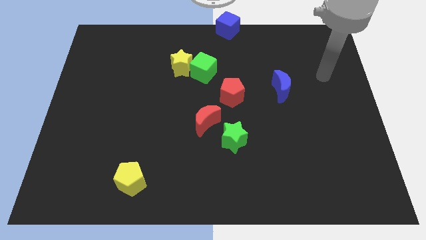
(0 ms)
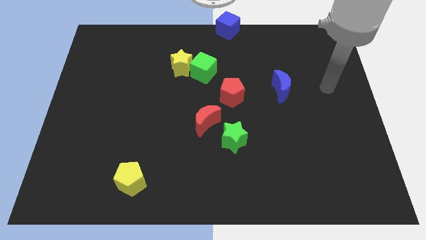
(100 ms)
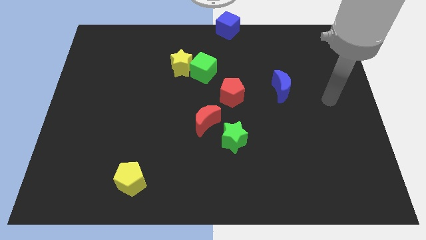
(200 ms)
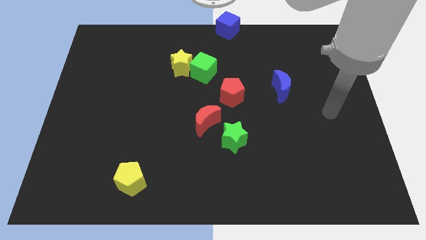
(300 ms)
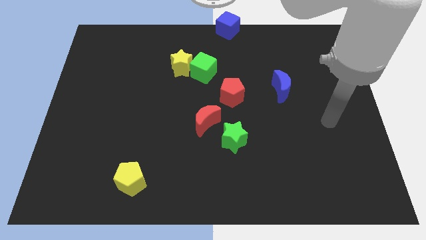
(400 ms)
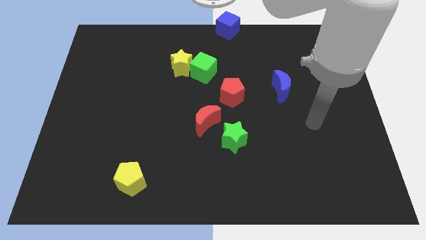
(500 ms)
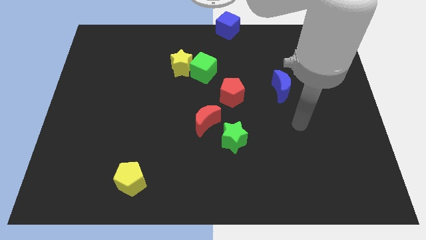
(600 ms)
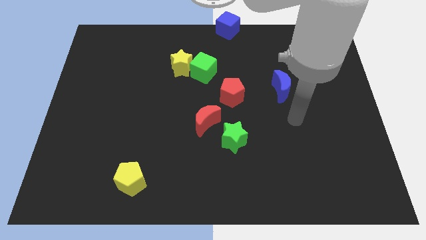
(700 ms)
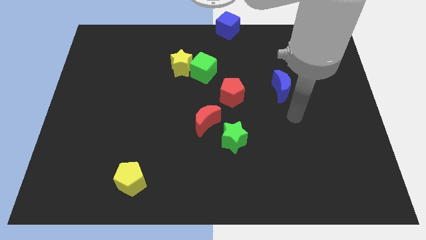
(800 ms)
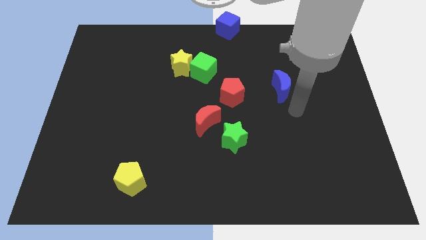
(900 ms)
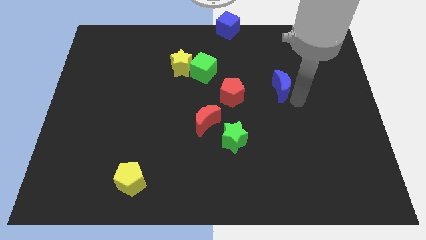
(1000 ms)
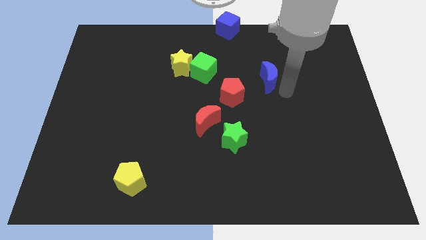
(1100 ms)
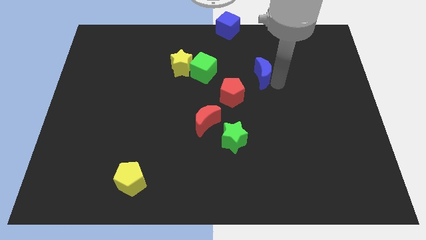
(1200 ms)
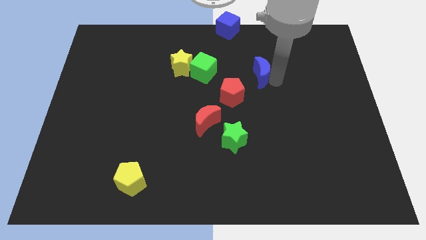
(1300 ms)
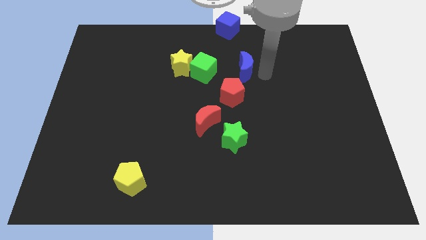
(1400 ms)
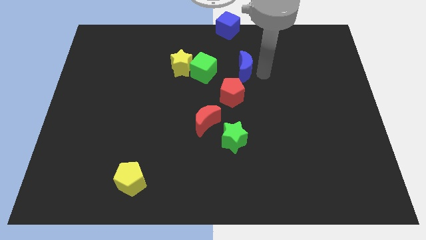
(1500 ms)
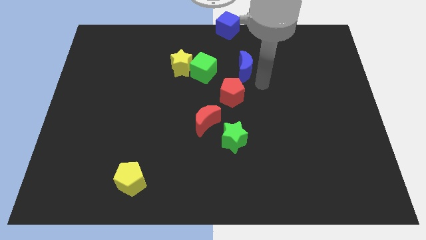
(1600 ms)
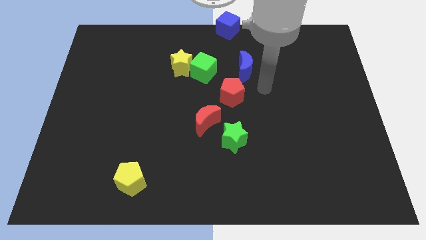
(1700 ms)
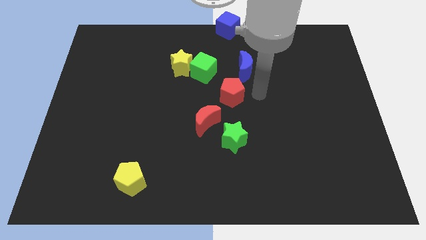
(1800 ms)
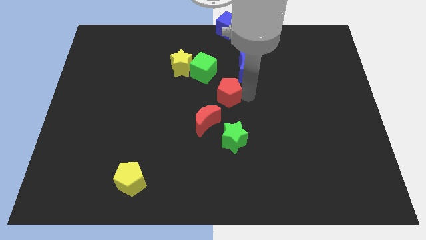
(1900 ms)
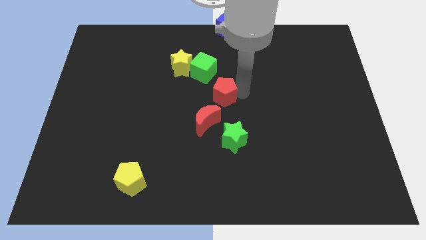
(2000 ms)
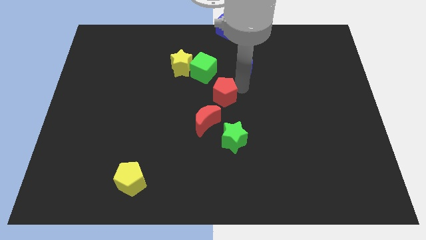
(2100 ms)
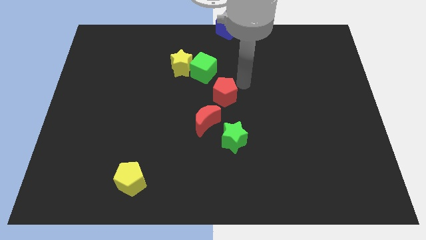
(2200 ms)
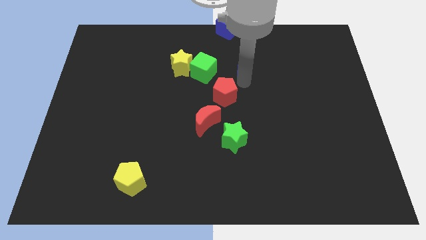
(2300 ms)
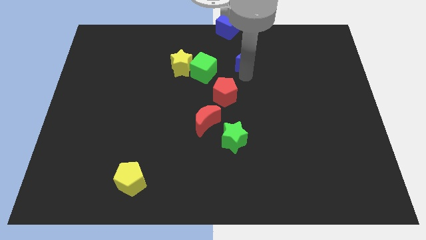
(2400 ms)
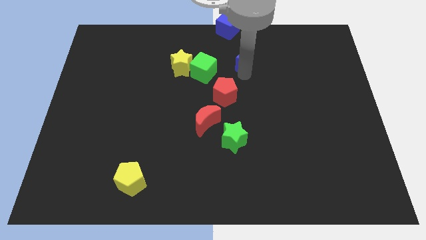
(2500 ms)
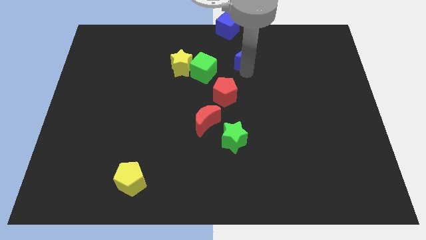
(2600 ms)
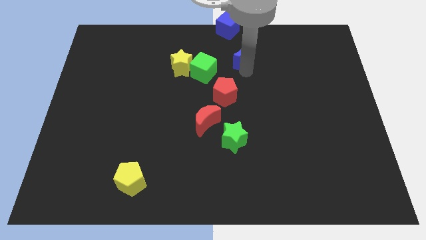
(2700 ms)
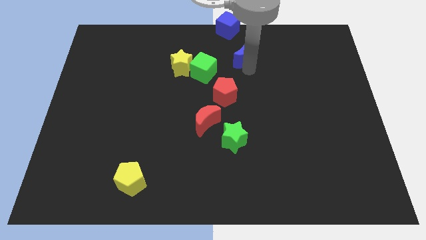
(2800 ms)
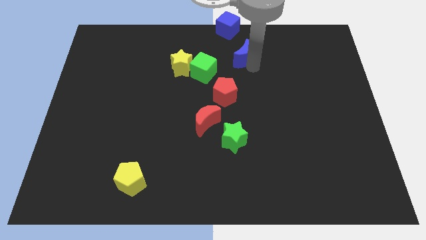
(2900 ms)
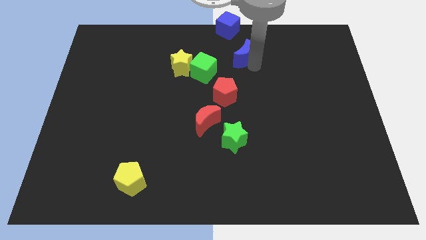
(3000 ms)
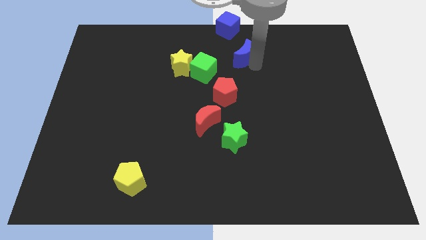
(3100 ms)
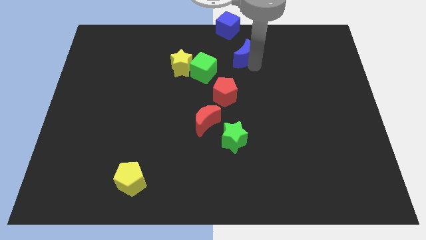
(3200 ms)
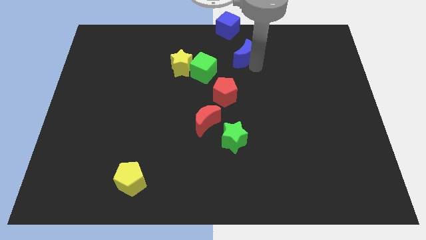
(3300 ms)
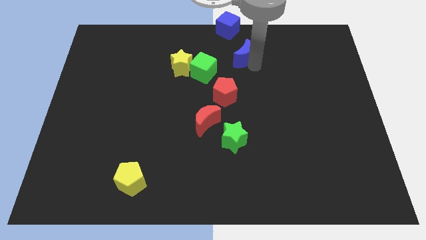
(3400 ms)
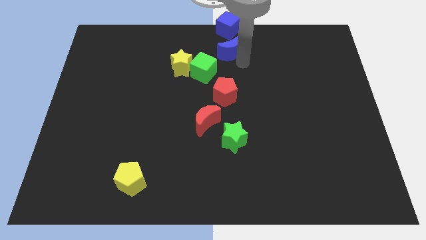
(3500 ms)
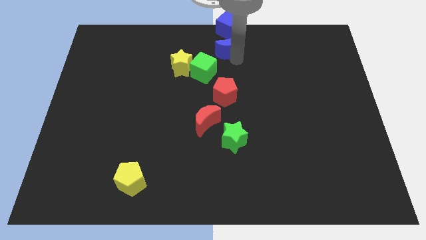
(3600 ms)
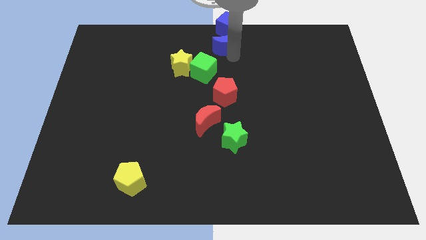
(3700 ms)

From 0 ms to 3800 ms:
place blue crescent below blue cube

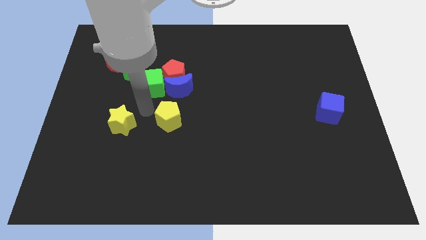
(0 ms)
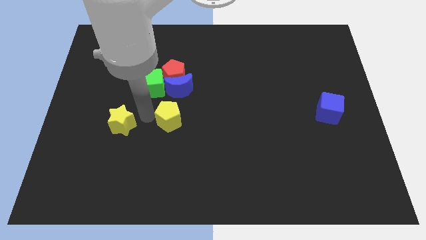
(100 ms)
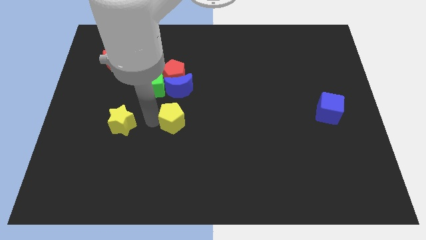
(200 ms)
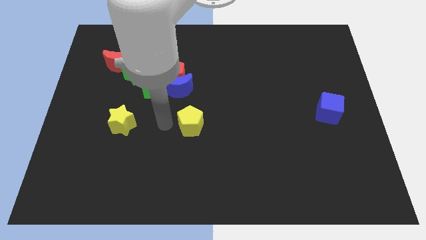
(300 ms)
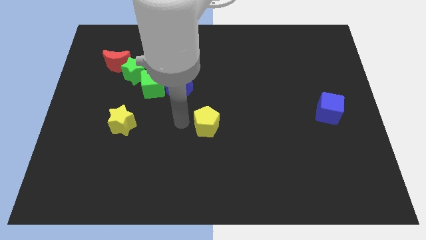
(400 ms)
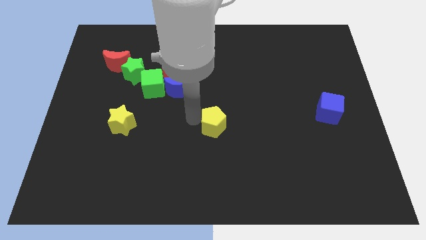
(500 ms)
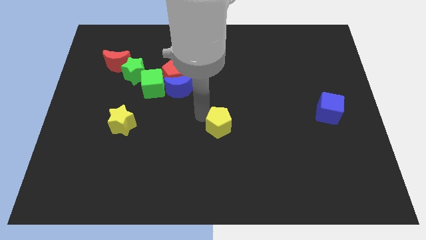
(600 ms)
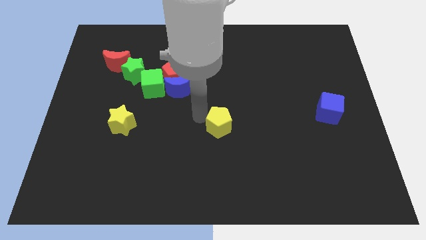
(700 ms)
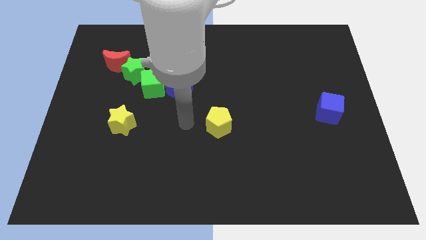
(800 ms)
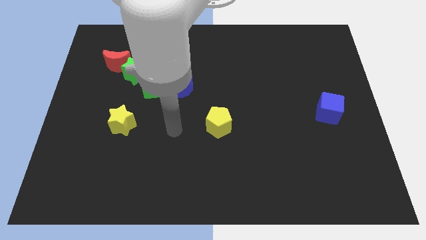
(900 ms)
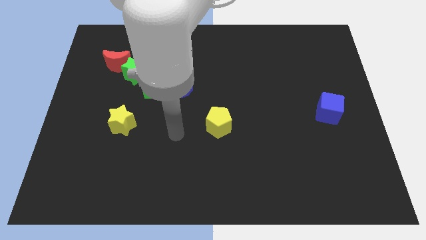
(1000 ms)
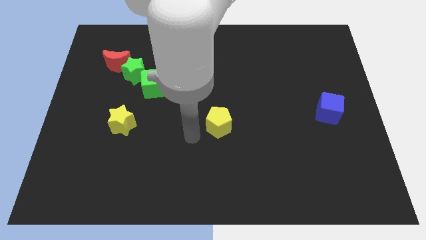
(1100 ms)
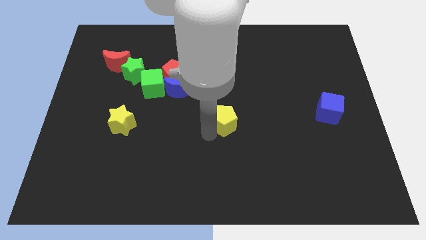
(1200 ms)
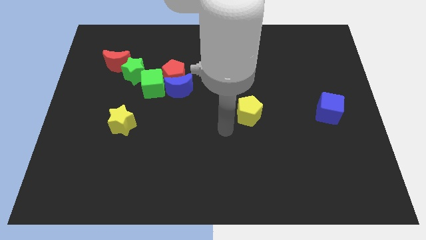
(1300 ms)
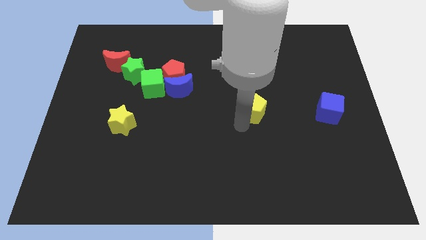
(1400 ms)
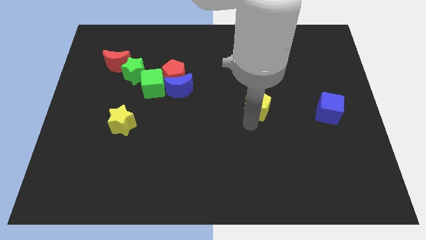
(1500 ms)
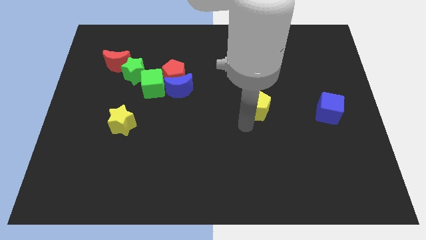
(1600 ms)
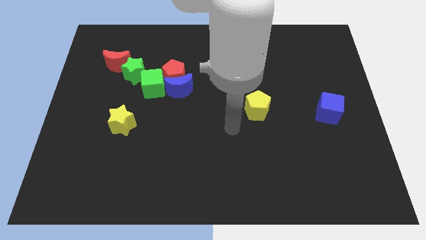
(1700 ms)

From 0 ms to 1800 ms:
push the yellow pentagon towards the left of the blue cube

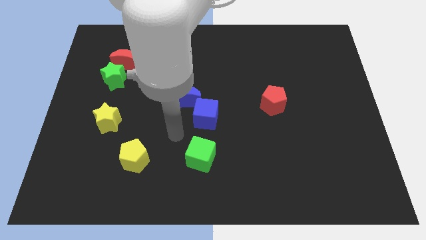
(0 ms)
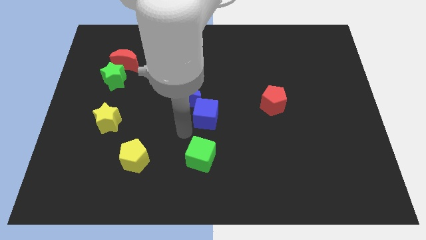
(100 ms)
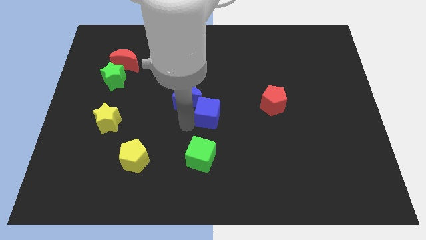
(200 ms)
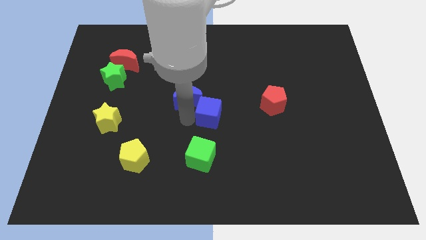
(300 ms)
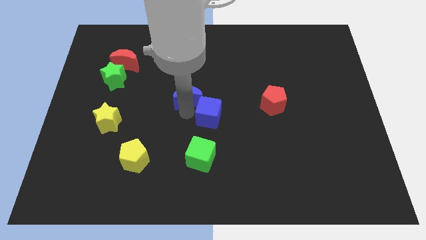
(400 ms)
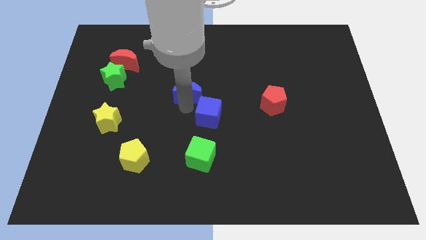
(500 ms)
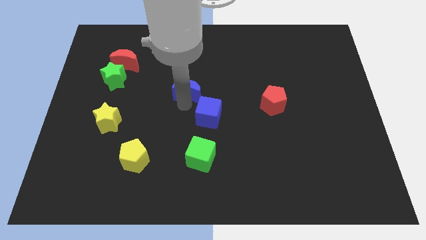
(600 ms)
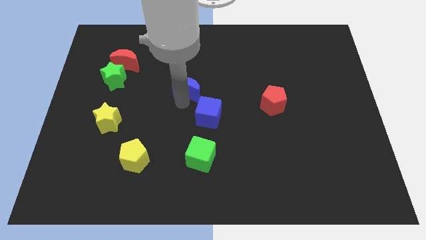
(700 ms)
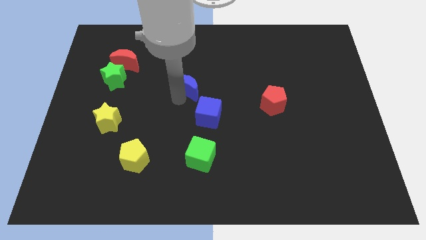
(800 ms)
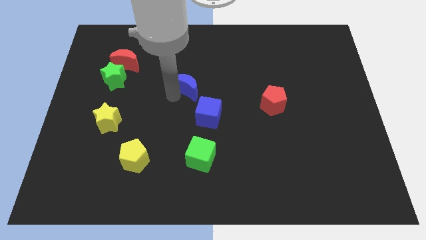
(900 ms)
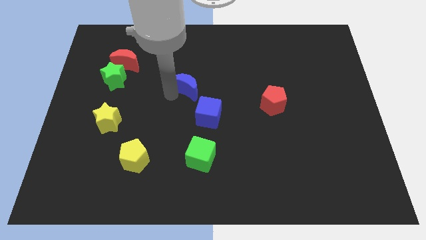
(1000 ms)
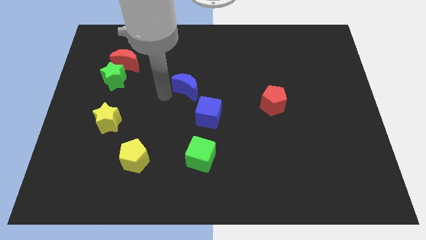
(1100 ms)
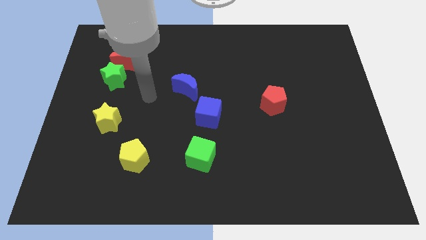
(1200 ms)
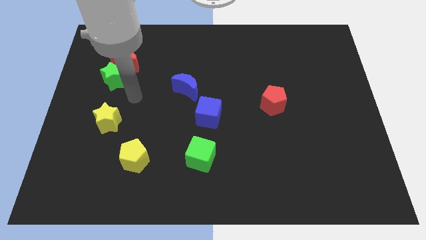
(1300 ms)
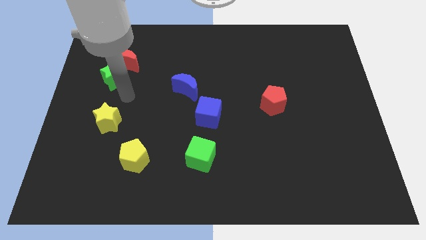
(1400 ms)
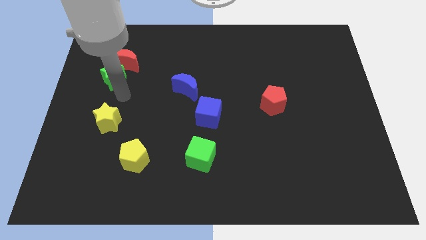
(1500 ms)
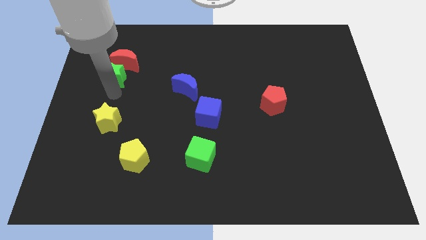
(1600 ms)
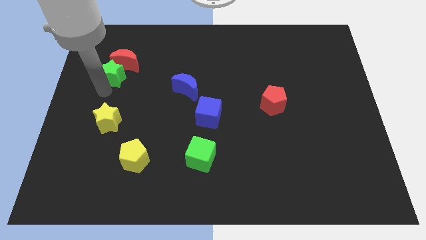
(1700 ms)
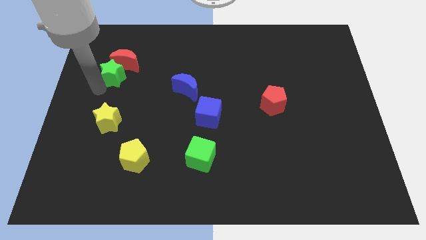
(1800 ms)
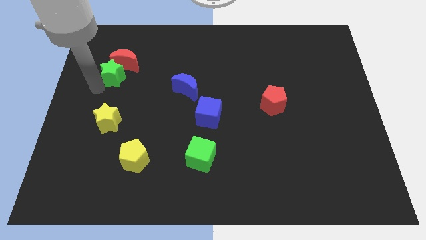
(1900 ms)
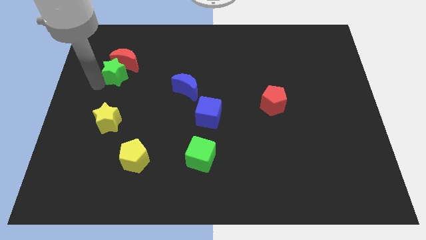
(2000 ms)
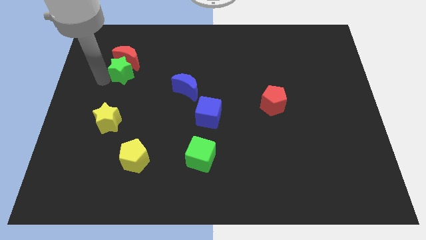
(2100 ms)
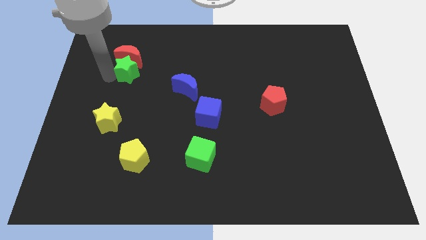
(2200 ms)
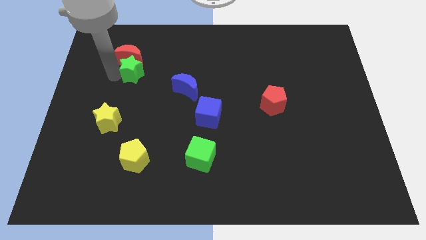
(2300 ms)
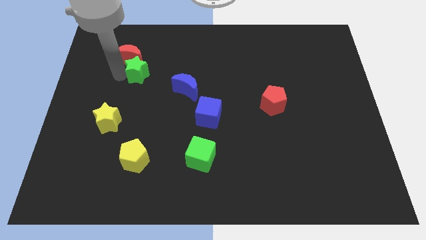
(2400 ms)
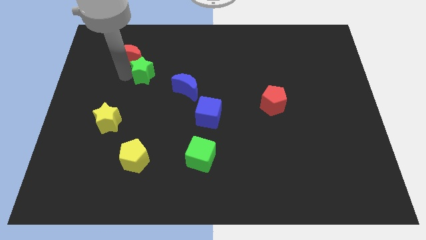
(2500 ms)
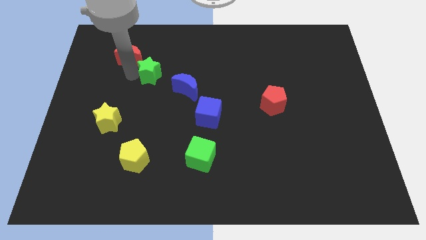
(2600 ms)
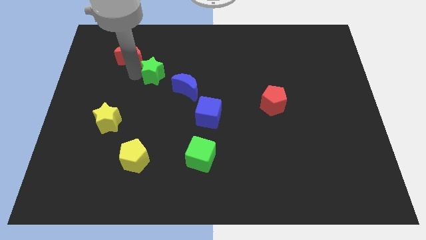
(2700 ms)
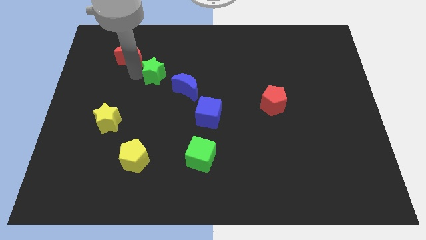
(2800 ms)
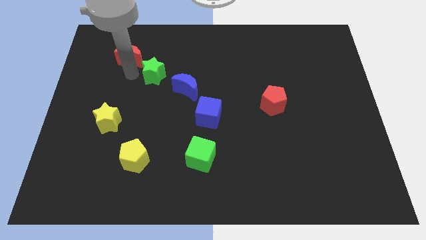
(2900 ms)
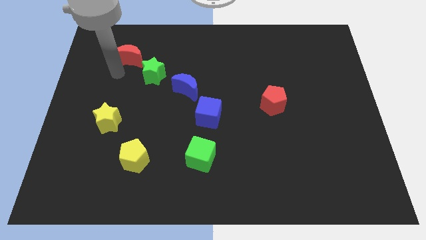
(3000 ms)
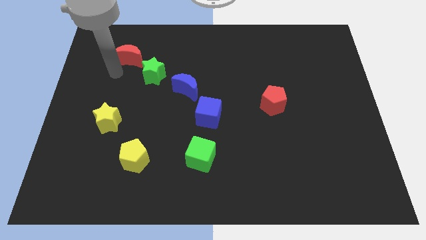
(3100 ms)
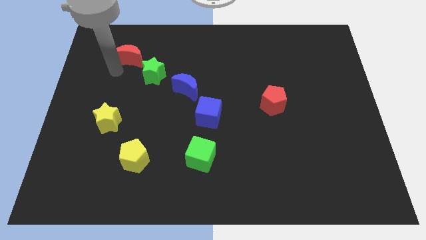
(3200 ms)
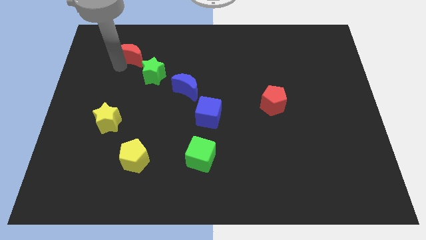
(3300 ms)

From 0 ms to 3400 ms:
move the green star into the red crescent
